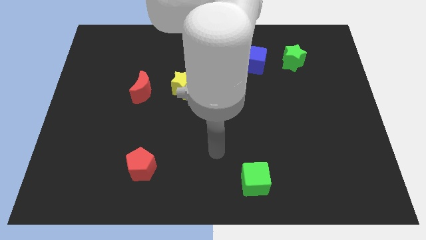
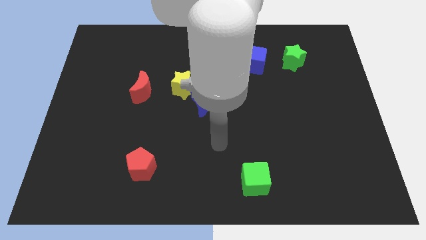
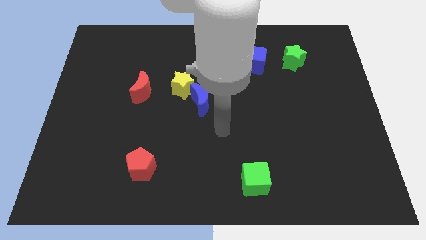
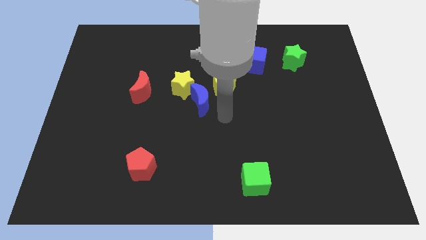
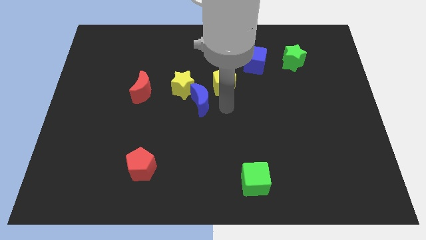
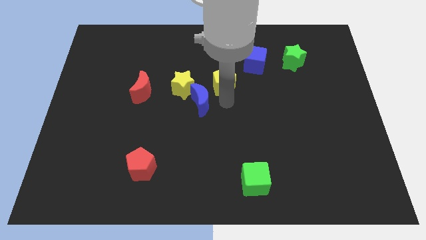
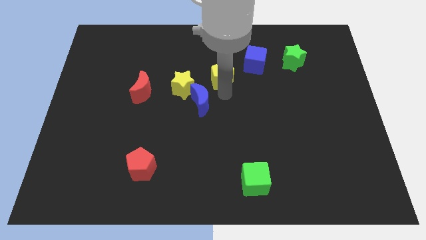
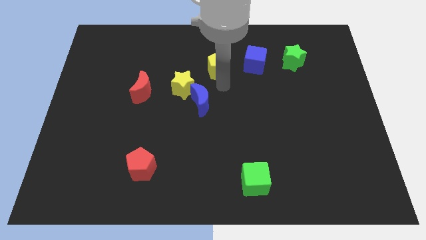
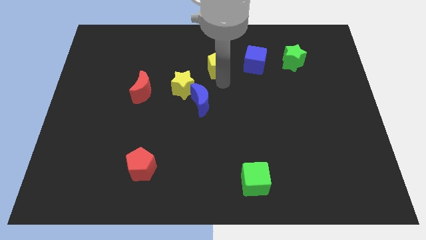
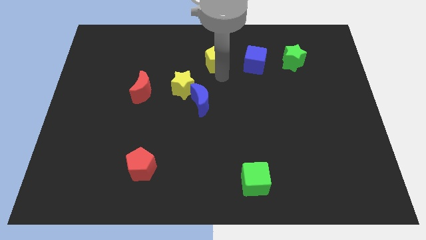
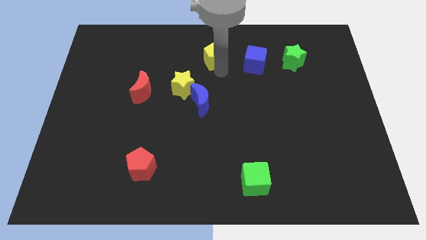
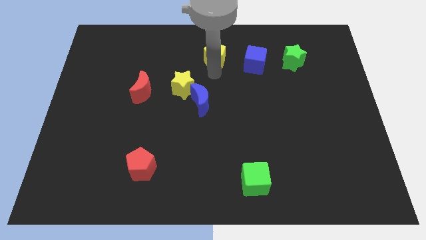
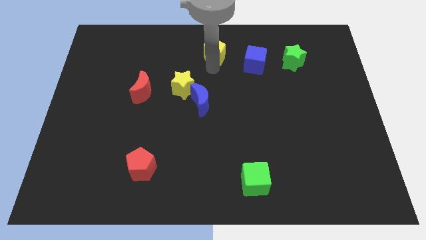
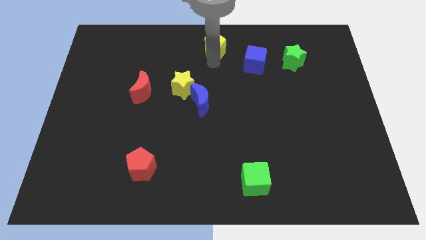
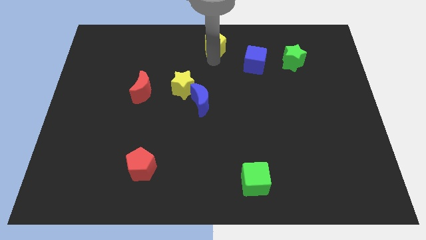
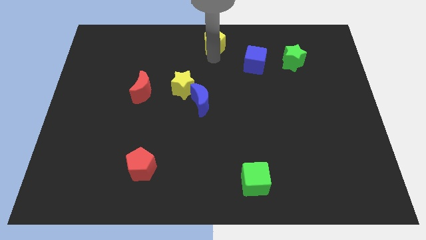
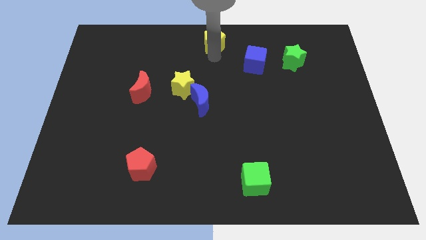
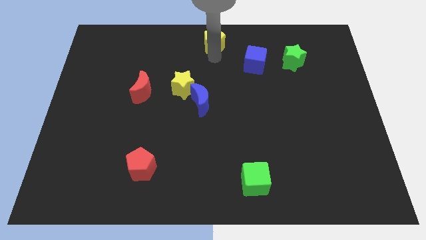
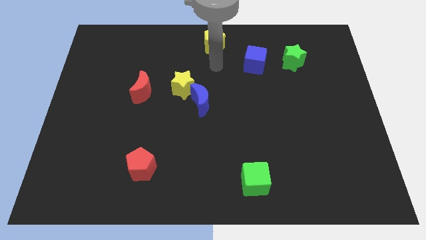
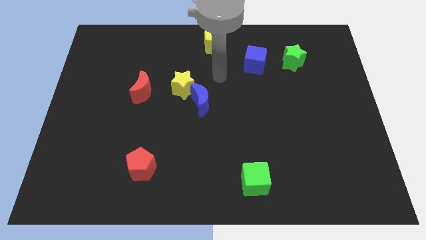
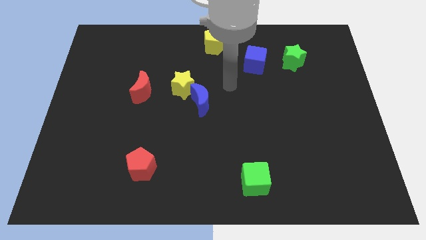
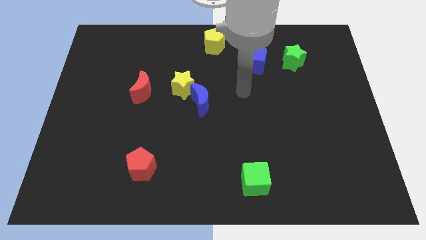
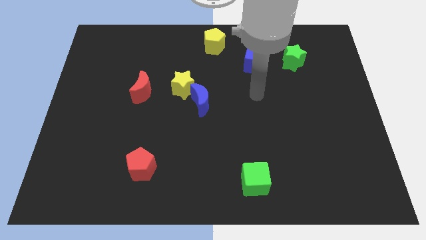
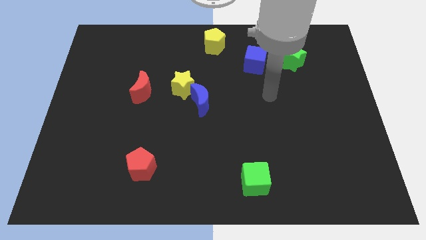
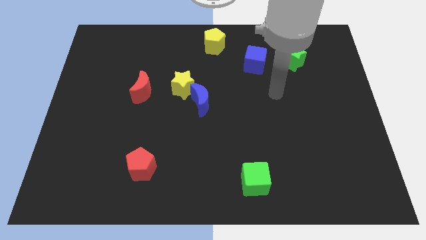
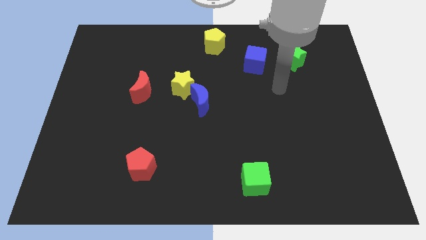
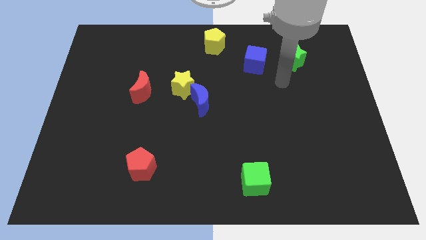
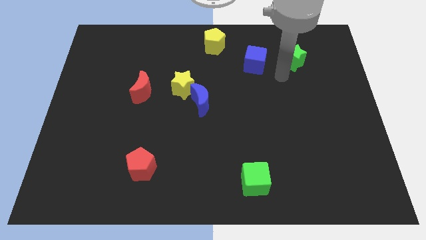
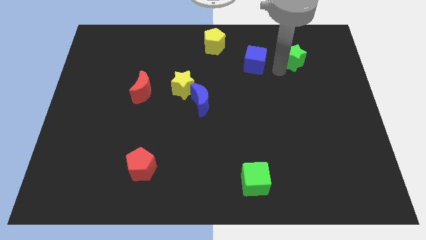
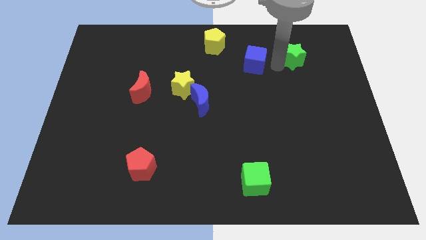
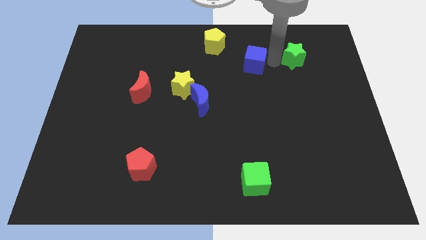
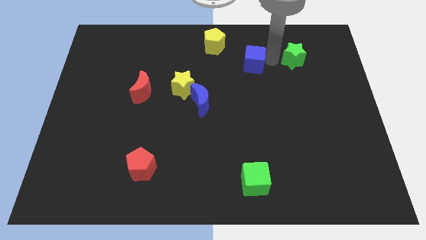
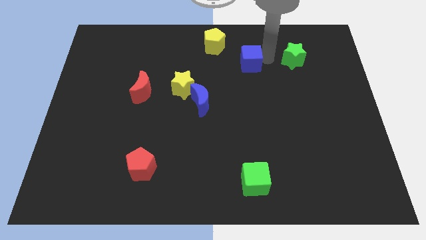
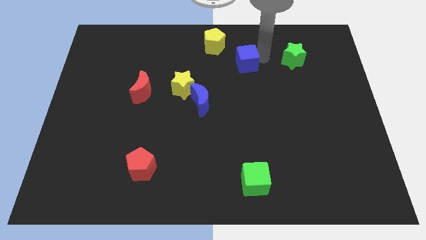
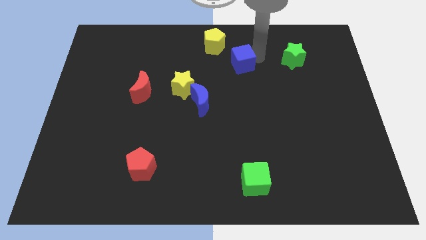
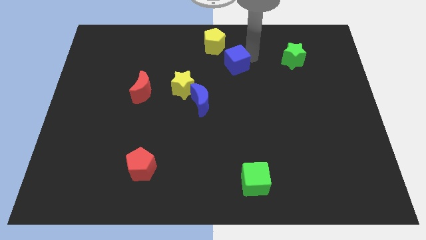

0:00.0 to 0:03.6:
push the yellow pentagon to the top side of the board

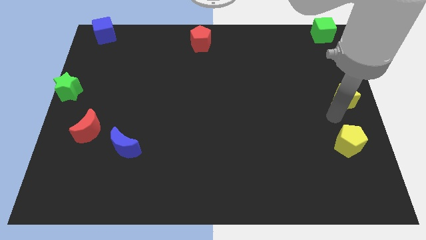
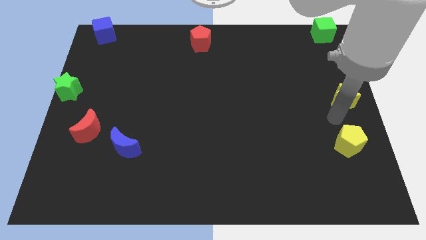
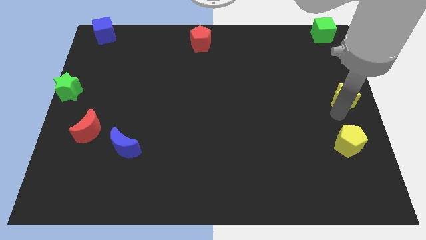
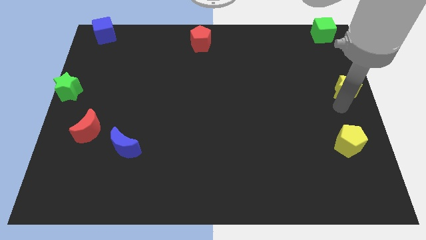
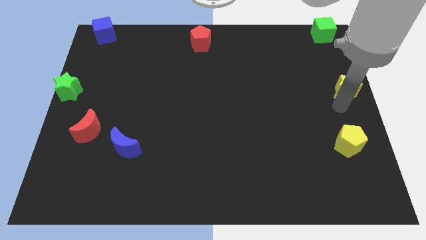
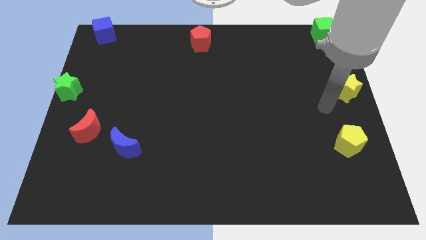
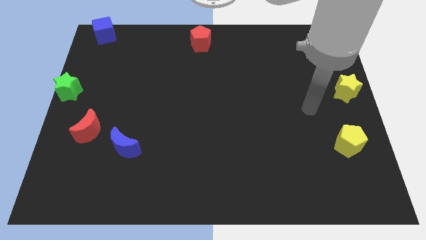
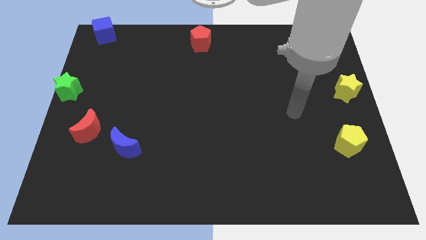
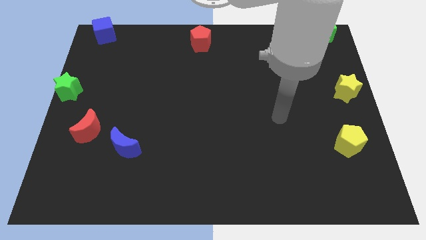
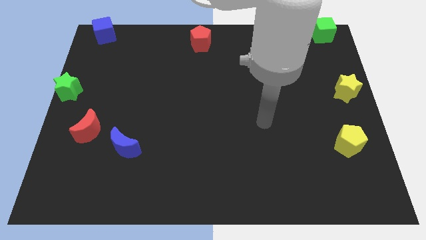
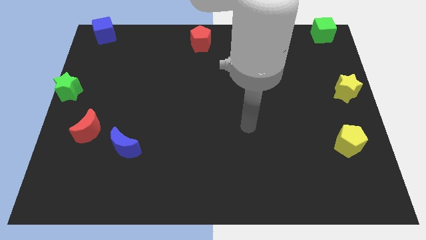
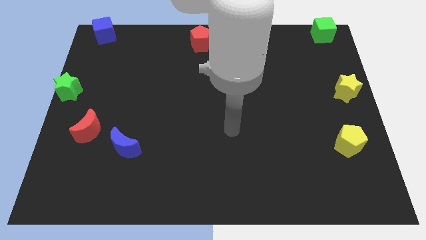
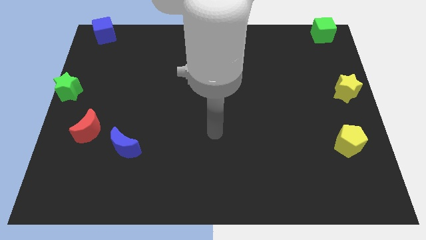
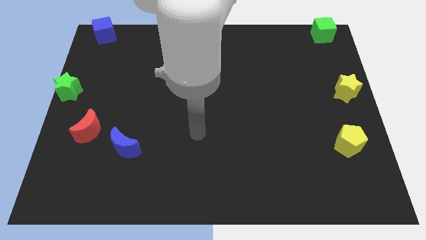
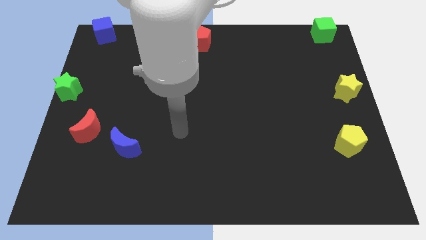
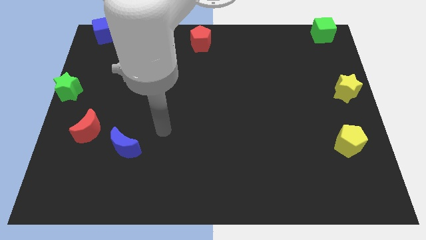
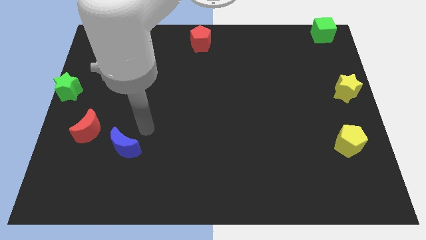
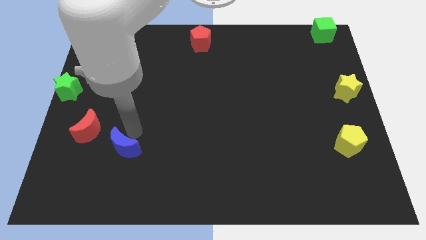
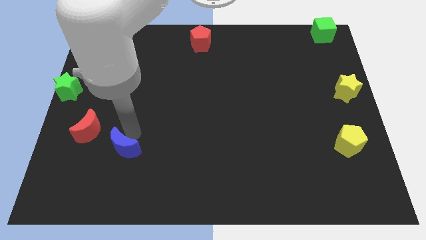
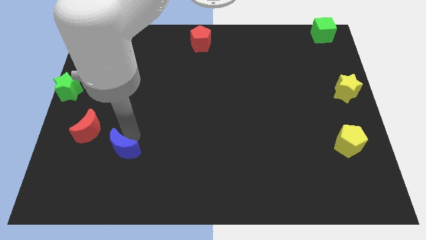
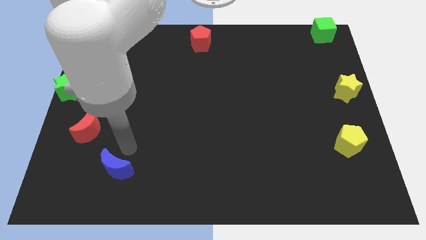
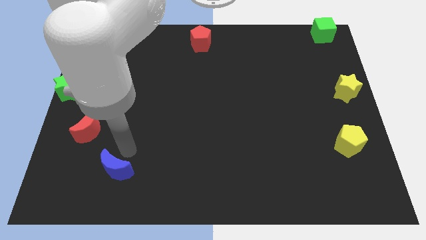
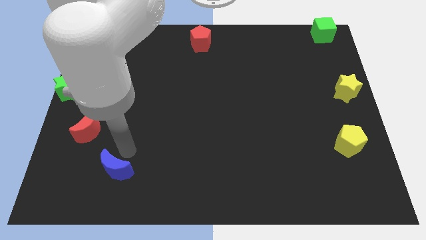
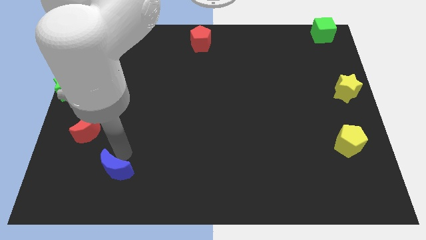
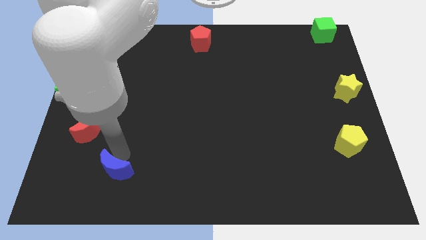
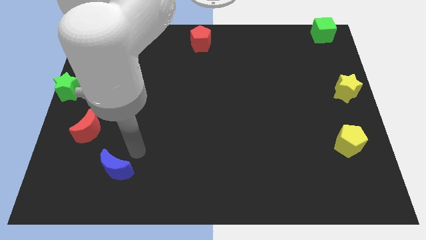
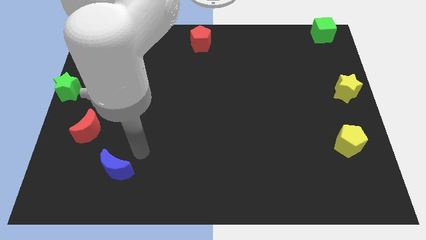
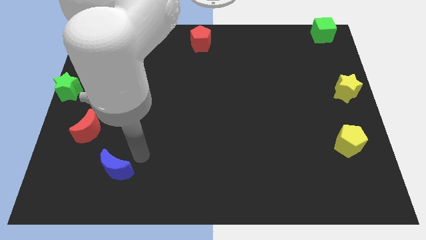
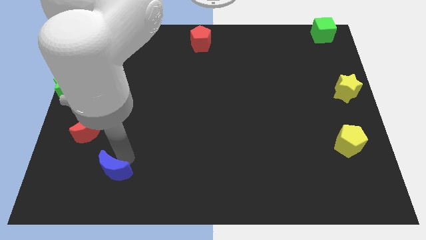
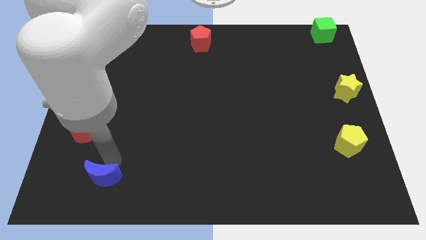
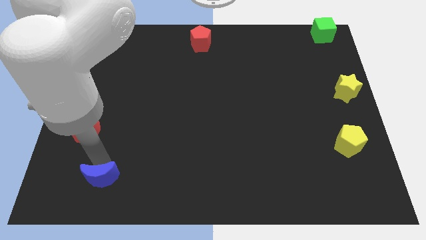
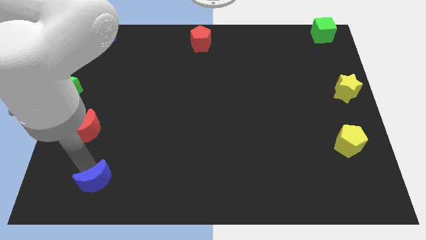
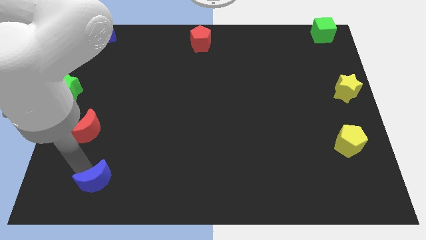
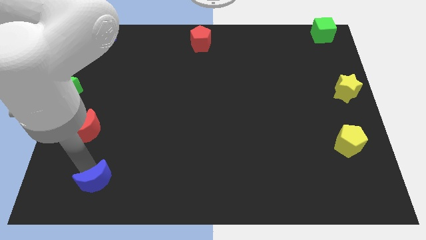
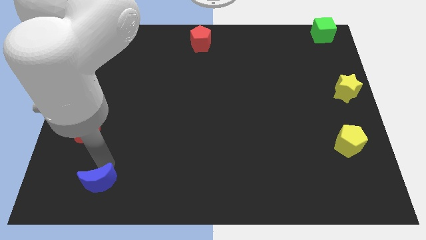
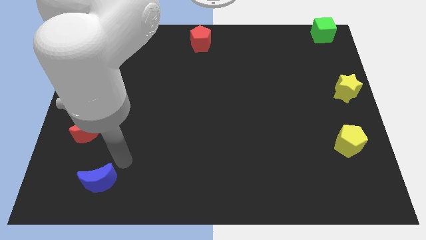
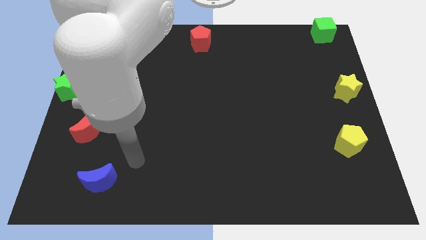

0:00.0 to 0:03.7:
slightly push the blue crescent towards the bottom left of the board

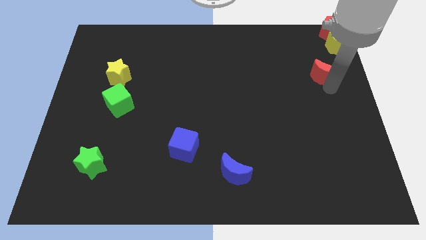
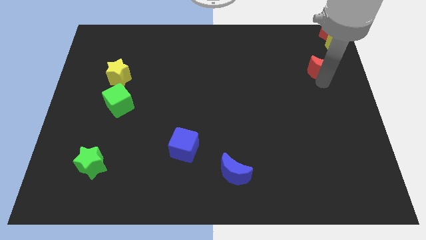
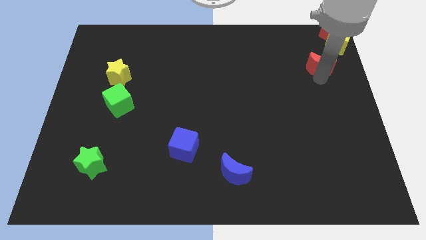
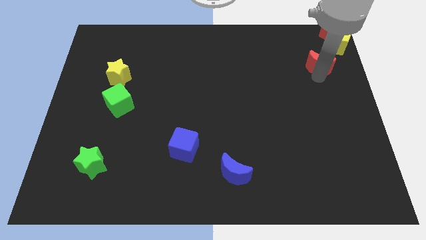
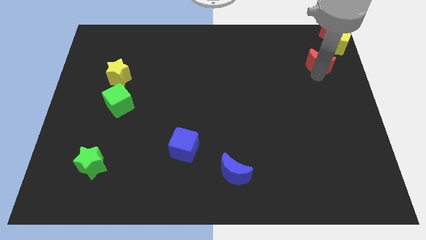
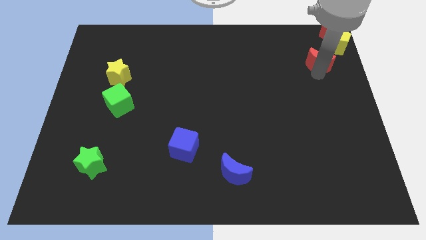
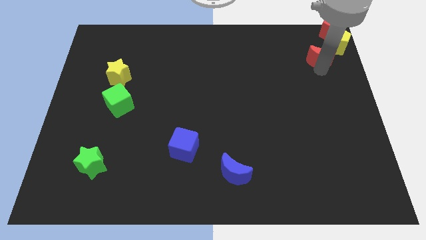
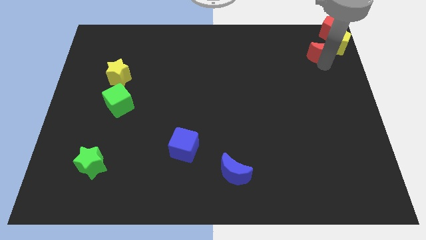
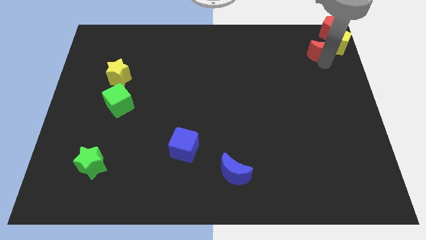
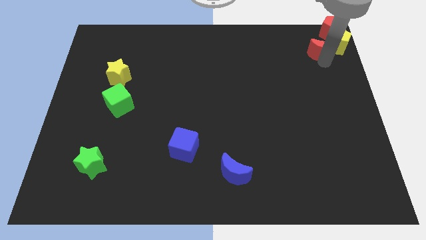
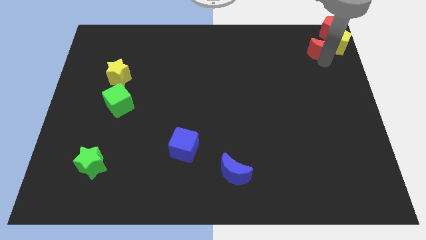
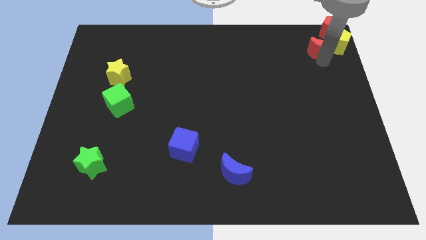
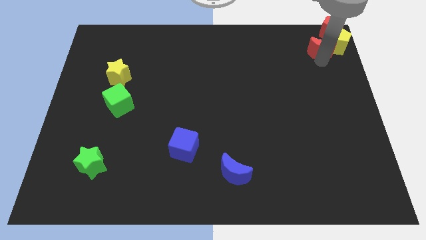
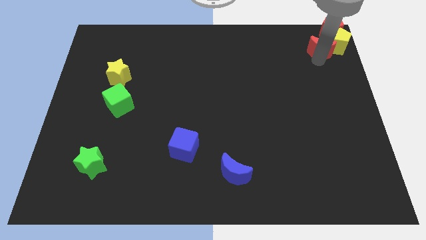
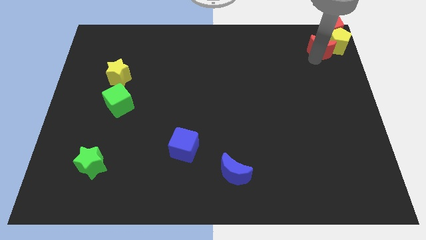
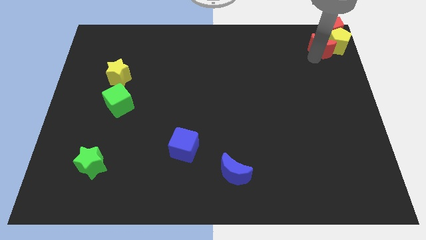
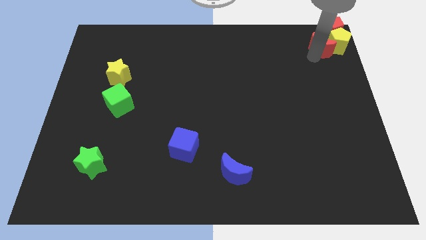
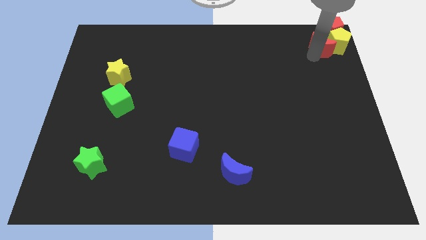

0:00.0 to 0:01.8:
take the red crescent close to the yellow pentagon
